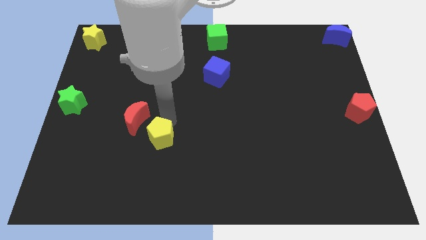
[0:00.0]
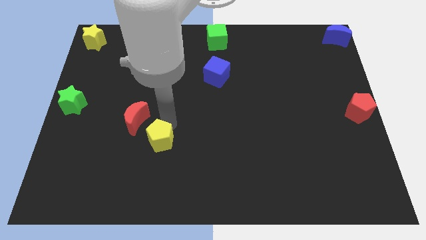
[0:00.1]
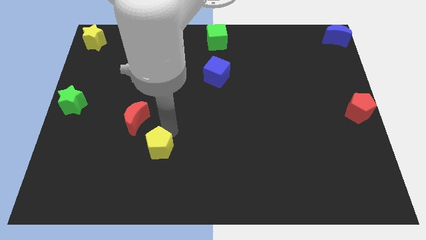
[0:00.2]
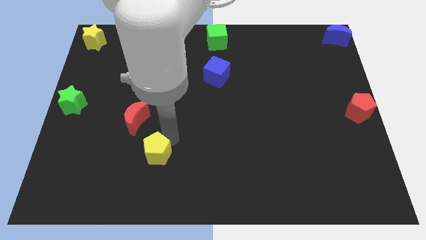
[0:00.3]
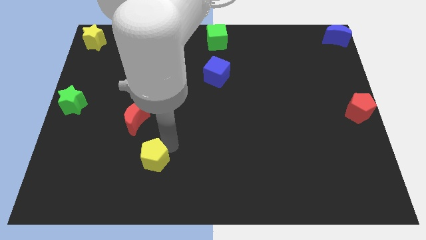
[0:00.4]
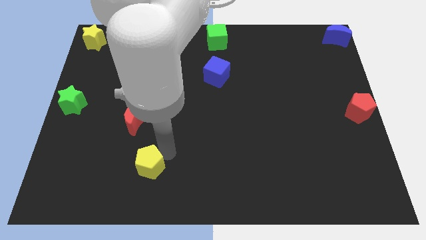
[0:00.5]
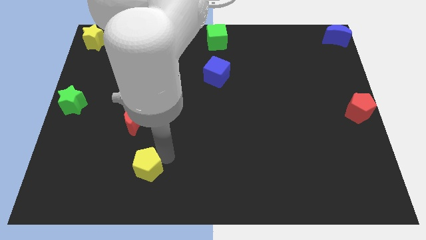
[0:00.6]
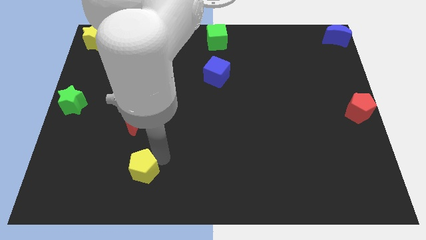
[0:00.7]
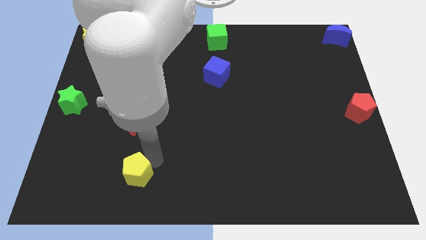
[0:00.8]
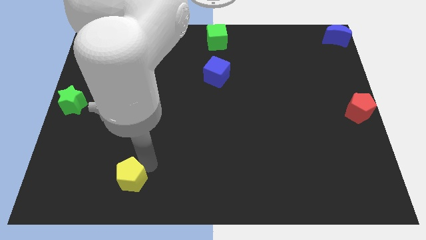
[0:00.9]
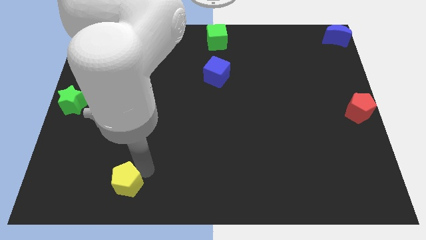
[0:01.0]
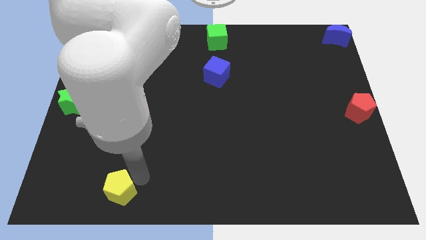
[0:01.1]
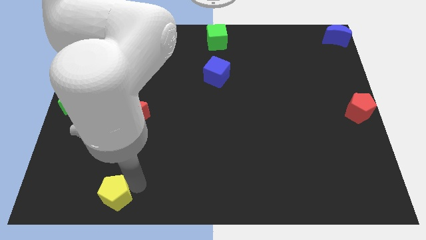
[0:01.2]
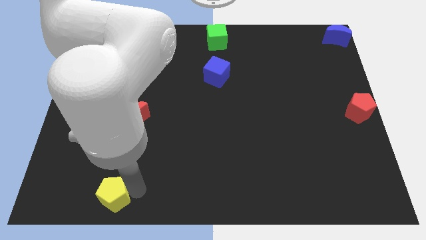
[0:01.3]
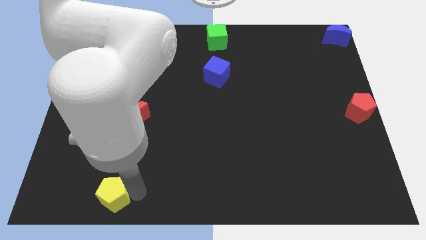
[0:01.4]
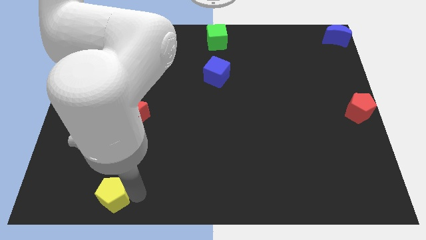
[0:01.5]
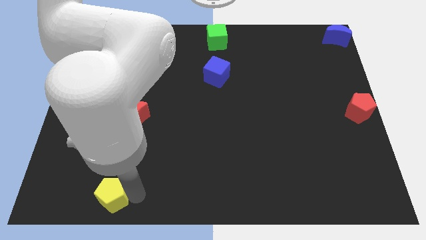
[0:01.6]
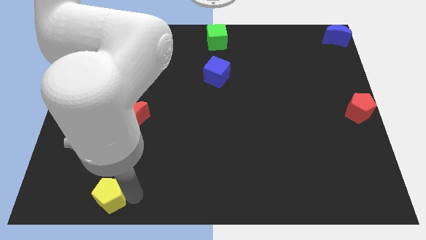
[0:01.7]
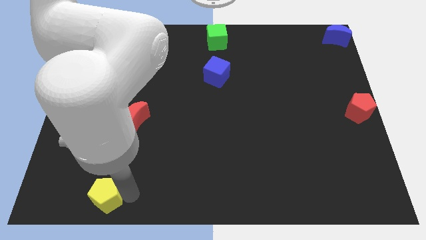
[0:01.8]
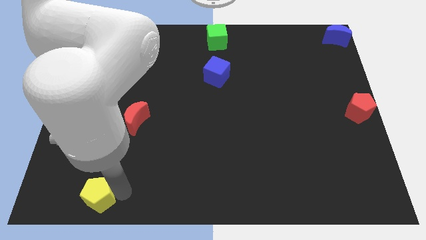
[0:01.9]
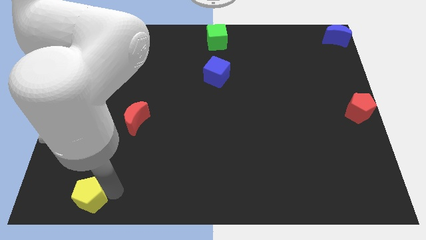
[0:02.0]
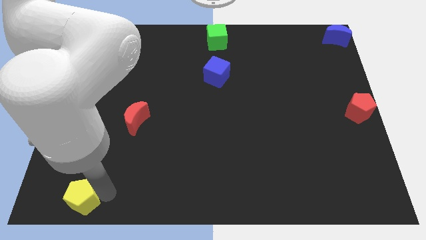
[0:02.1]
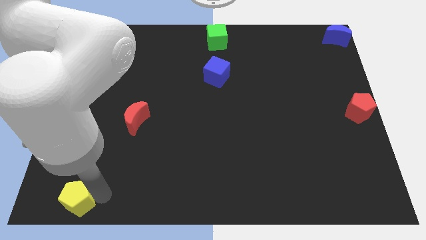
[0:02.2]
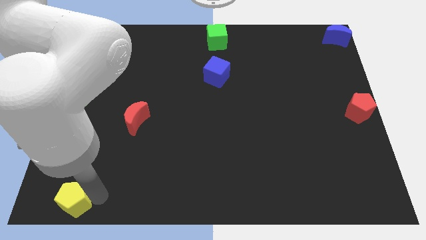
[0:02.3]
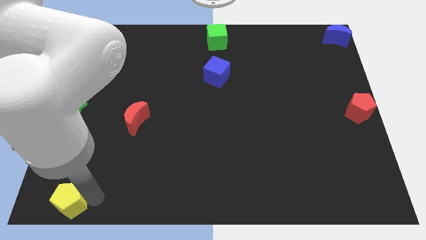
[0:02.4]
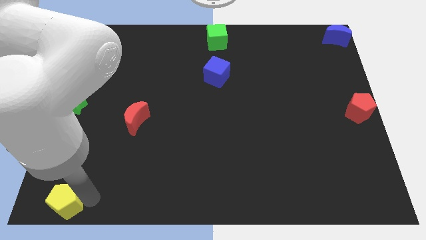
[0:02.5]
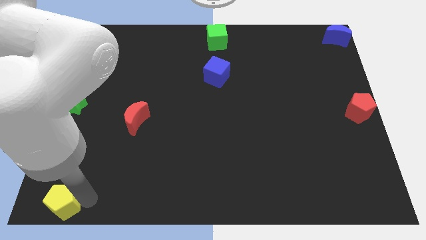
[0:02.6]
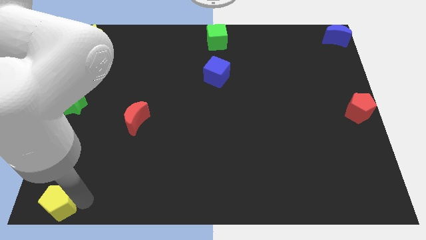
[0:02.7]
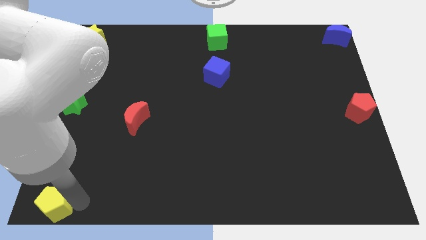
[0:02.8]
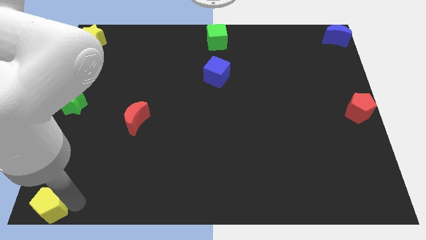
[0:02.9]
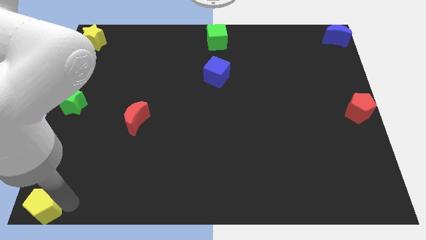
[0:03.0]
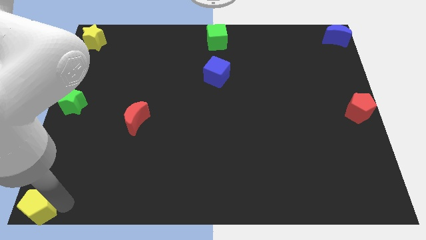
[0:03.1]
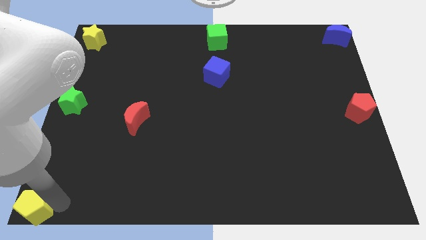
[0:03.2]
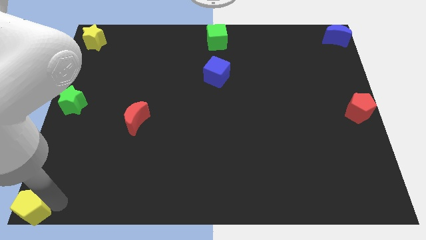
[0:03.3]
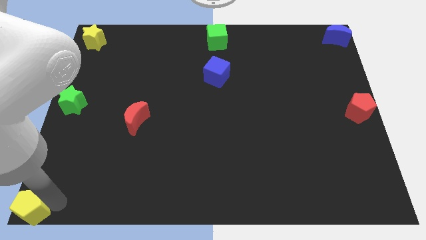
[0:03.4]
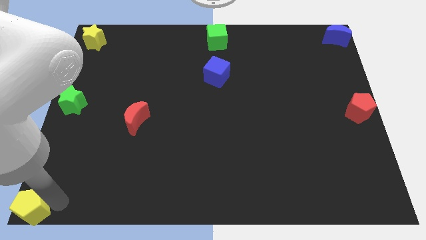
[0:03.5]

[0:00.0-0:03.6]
move the yellow pentagon to the bottom left of the board

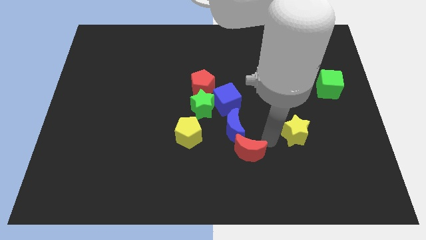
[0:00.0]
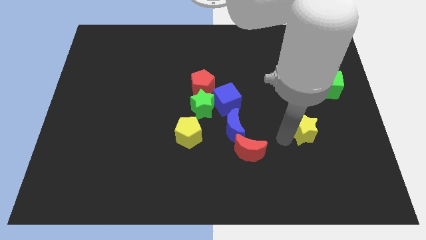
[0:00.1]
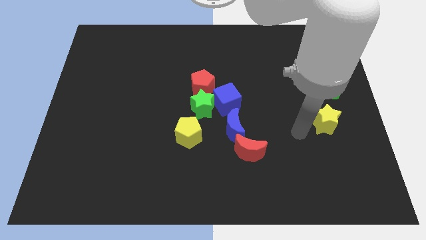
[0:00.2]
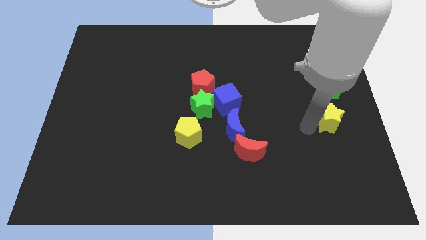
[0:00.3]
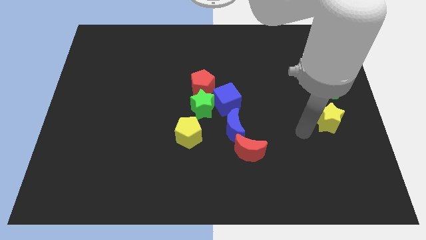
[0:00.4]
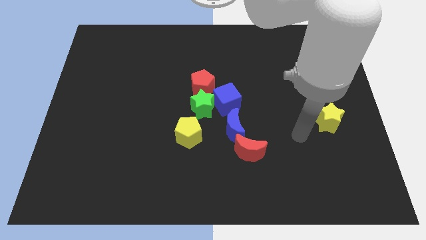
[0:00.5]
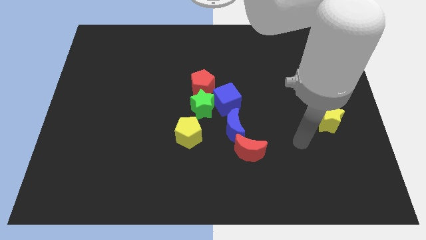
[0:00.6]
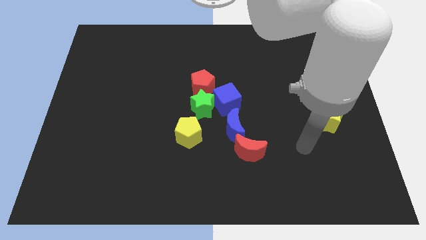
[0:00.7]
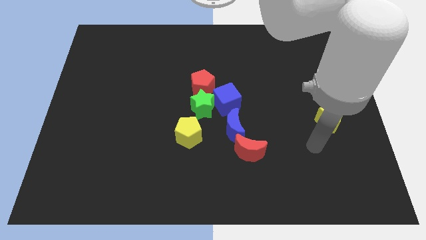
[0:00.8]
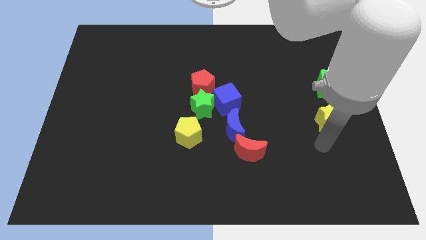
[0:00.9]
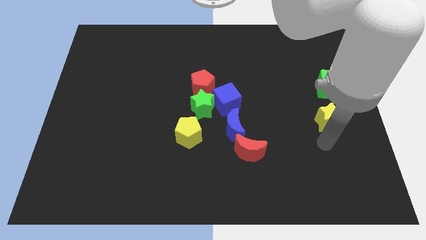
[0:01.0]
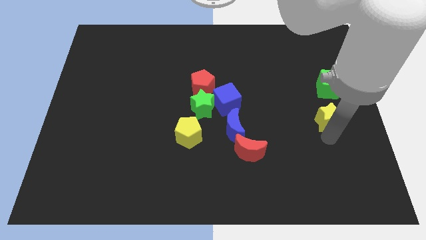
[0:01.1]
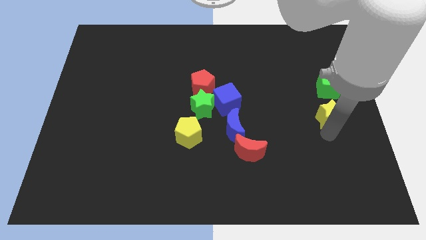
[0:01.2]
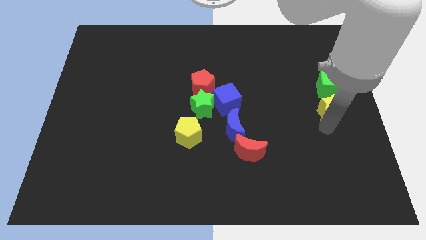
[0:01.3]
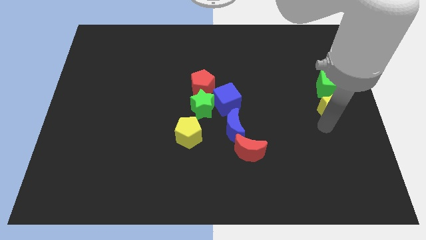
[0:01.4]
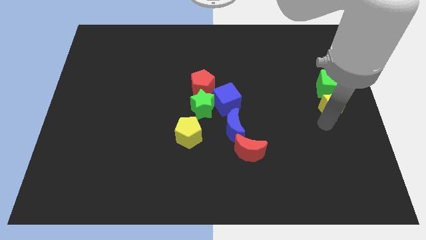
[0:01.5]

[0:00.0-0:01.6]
move the yellow star to the bottom of the green cube

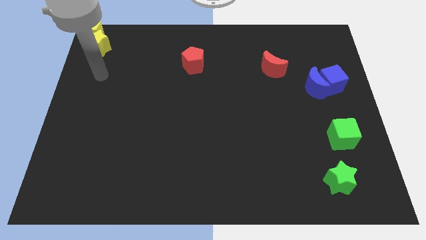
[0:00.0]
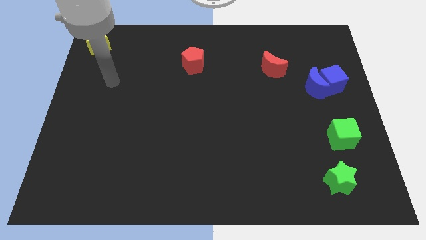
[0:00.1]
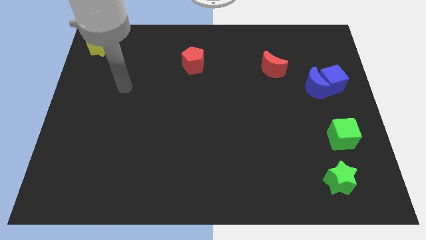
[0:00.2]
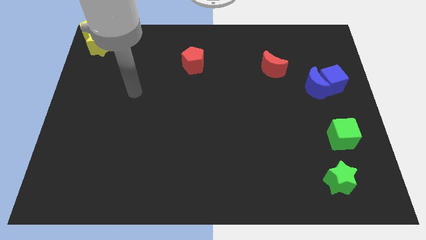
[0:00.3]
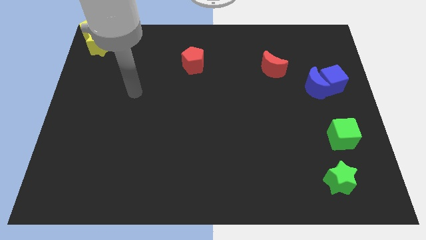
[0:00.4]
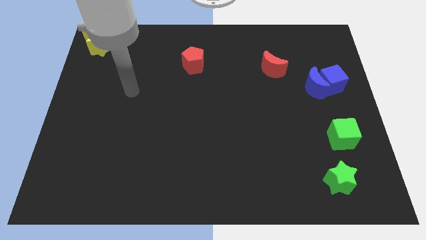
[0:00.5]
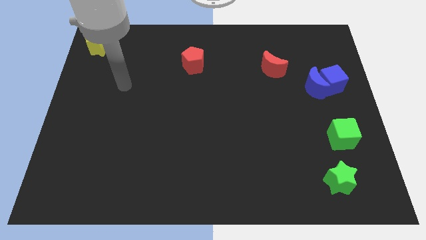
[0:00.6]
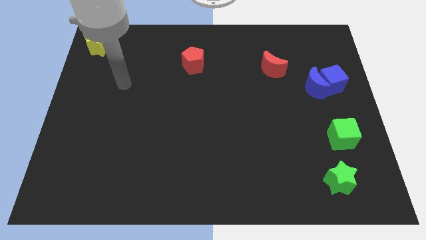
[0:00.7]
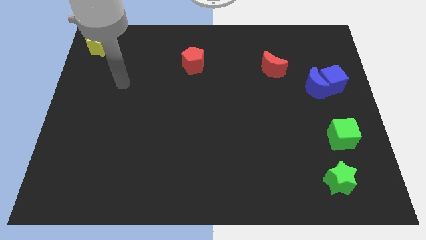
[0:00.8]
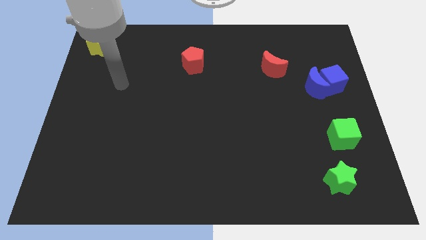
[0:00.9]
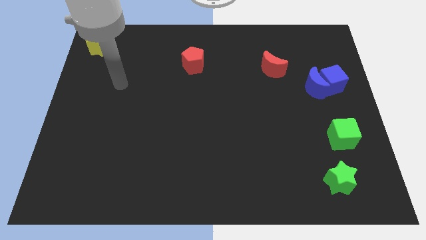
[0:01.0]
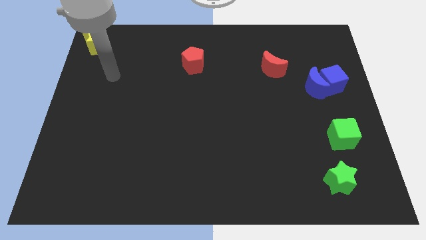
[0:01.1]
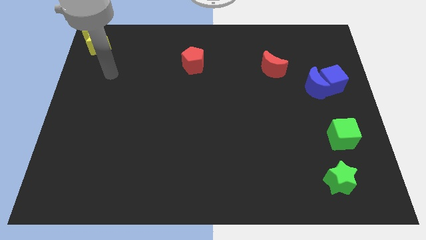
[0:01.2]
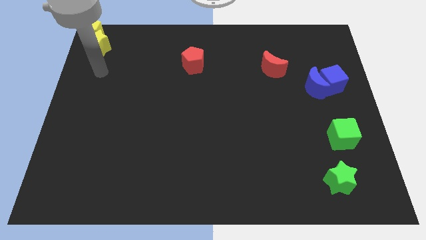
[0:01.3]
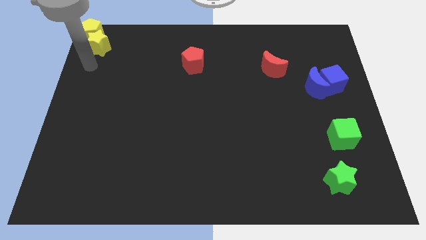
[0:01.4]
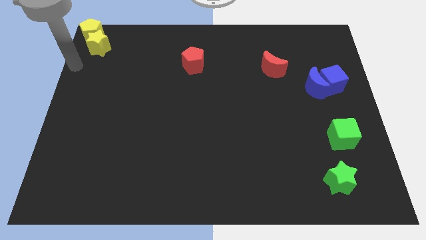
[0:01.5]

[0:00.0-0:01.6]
adjust your hand near yellow blocks

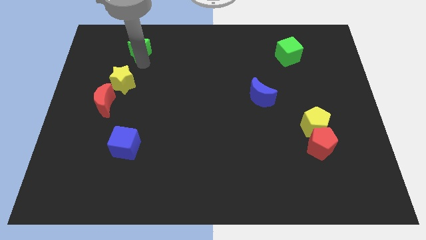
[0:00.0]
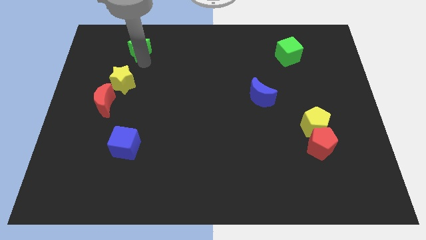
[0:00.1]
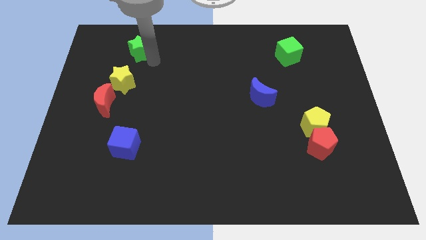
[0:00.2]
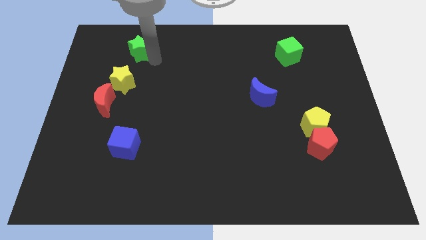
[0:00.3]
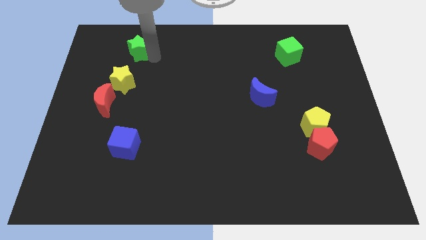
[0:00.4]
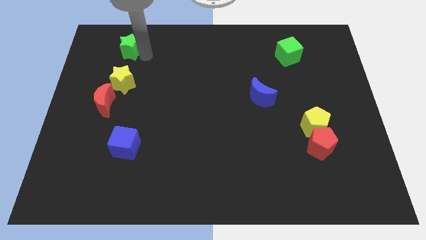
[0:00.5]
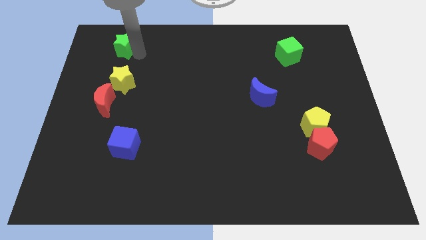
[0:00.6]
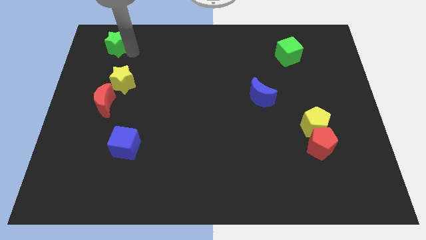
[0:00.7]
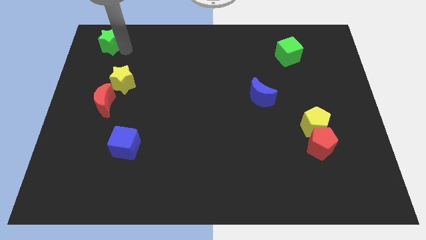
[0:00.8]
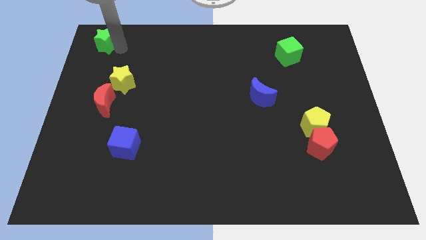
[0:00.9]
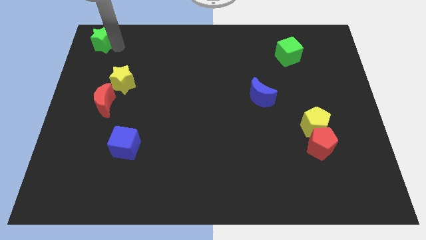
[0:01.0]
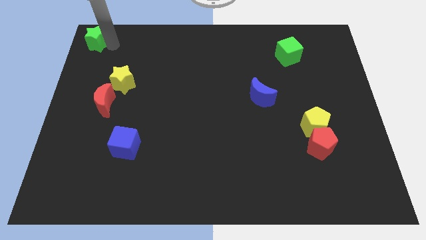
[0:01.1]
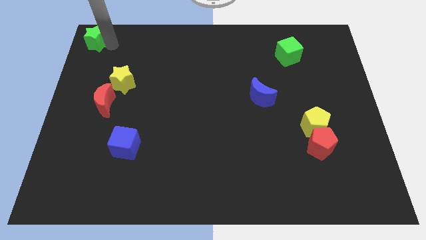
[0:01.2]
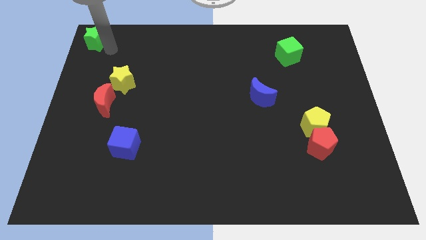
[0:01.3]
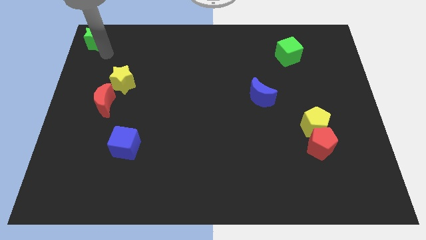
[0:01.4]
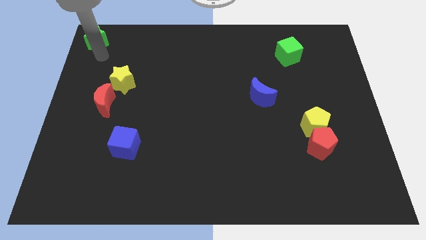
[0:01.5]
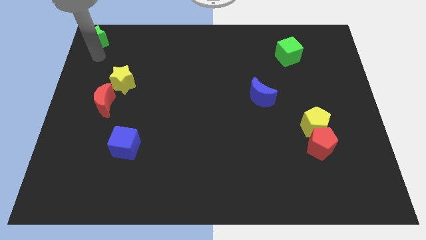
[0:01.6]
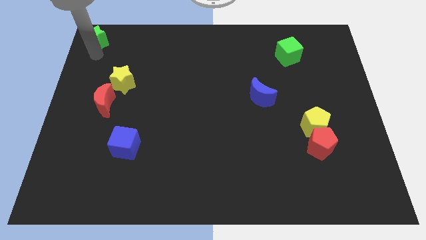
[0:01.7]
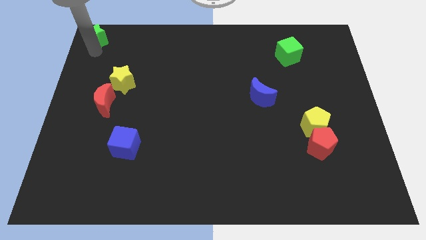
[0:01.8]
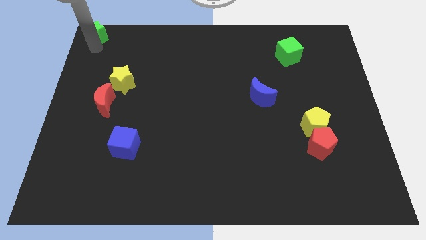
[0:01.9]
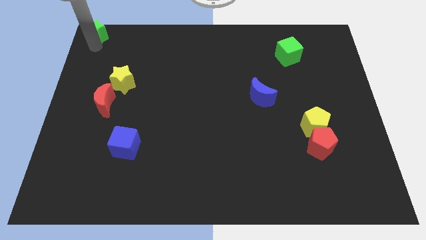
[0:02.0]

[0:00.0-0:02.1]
move the green star to the top right corner

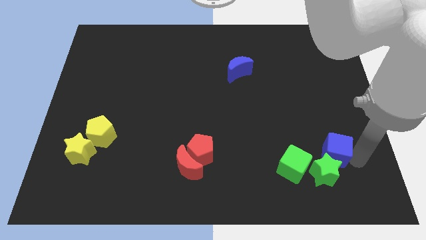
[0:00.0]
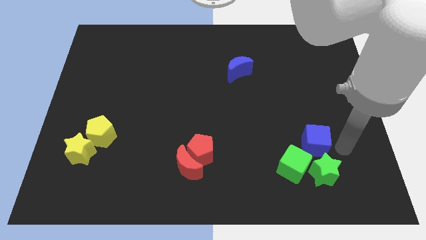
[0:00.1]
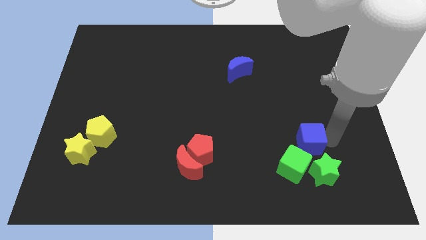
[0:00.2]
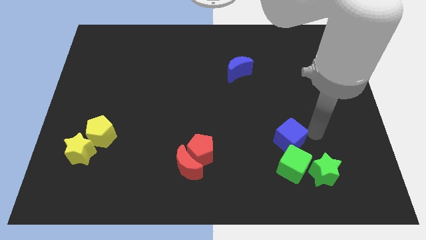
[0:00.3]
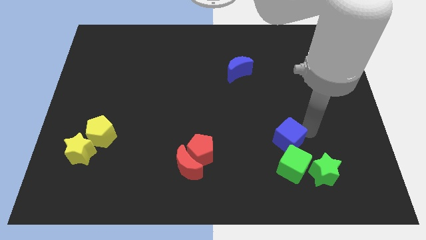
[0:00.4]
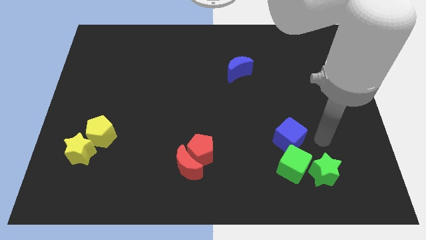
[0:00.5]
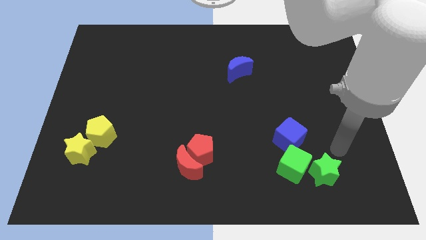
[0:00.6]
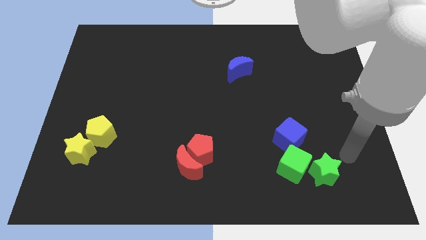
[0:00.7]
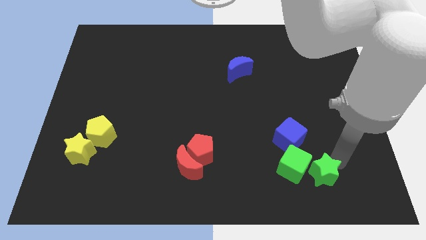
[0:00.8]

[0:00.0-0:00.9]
move the blue cube above the green cube
